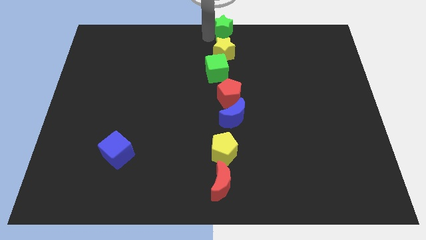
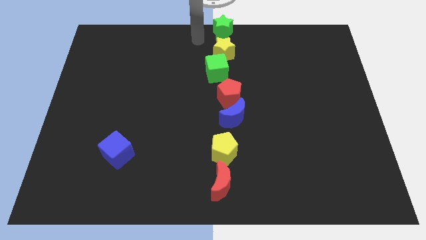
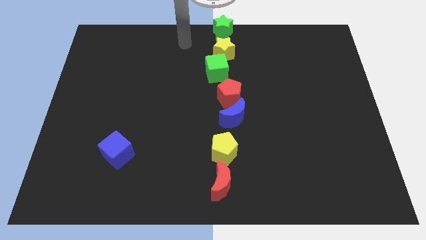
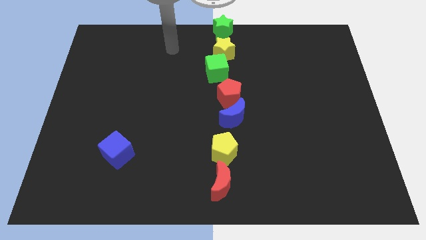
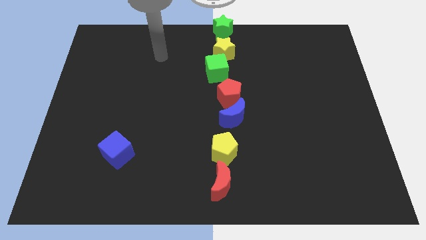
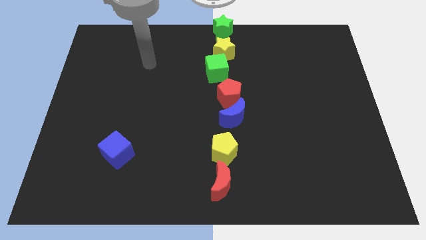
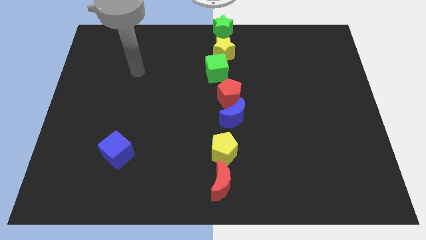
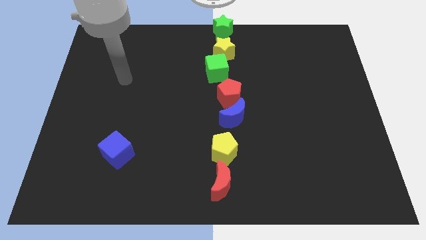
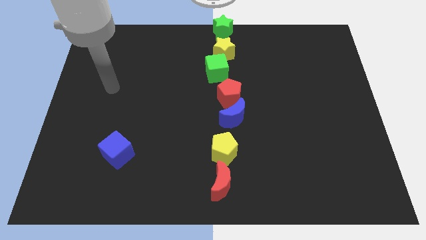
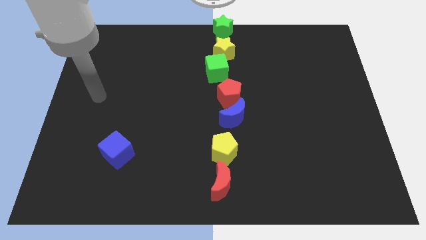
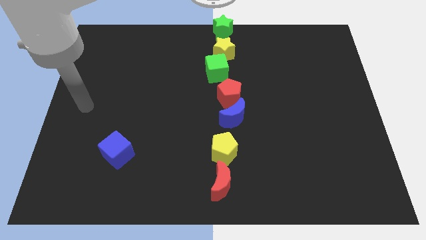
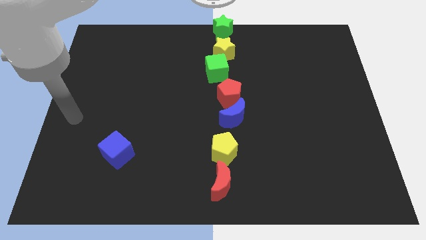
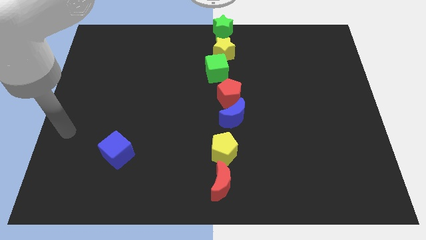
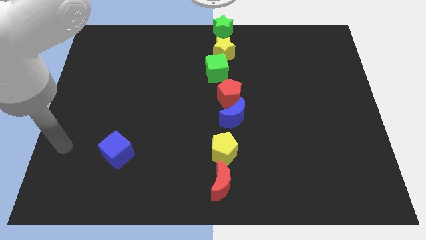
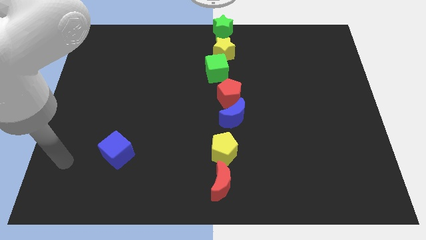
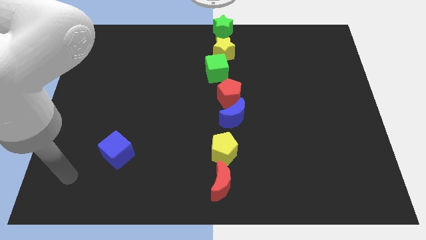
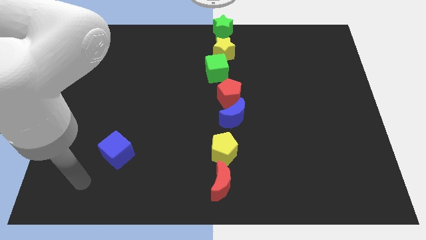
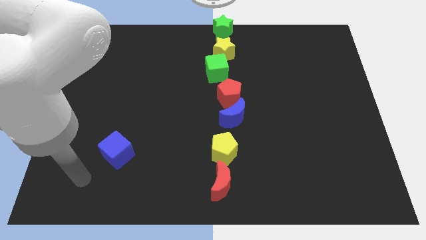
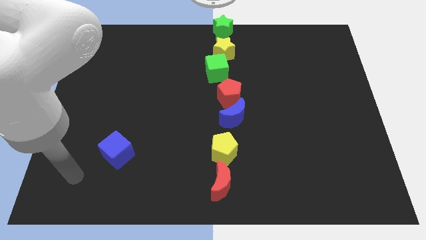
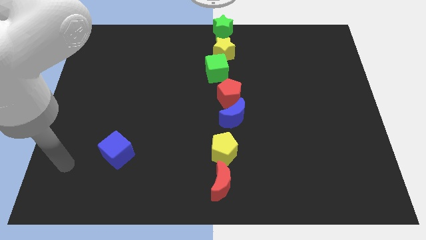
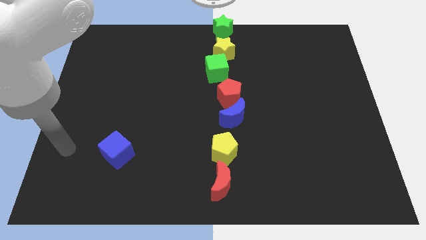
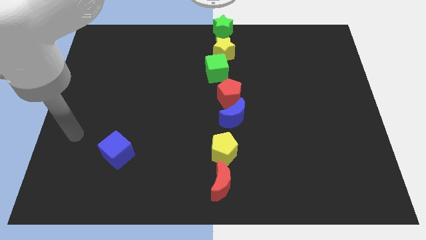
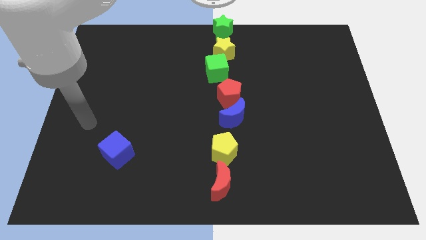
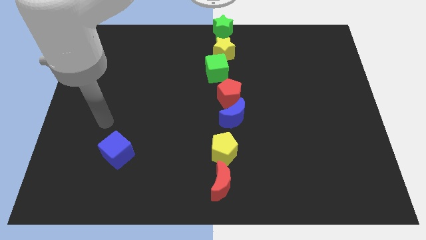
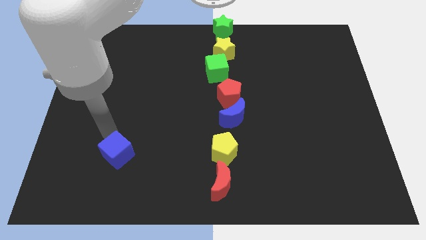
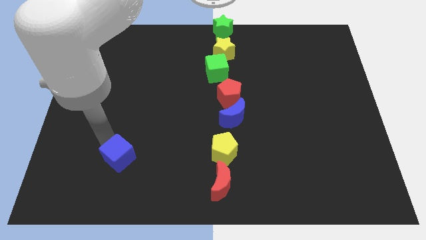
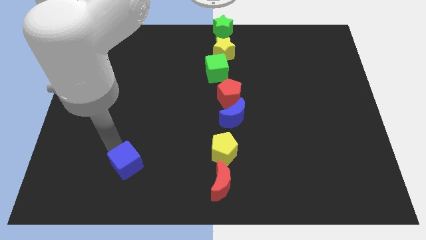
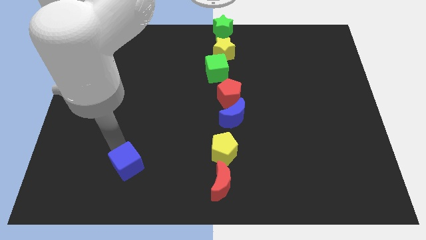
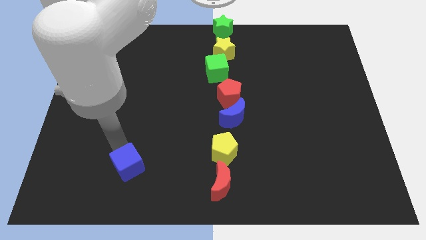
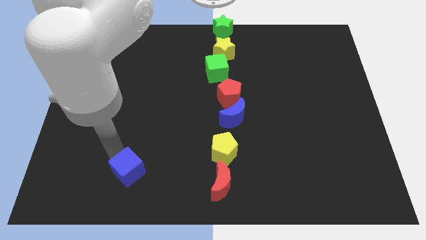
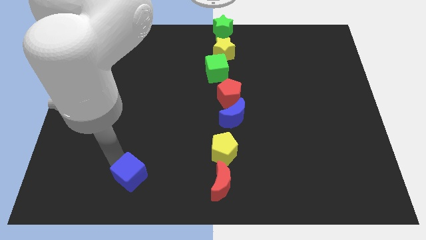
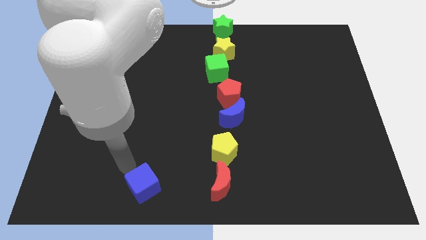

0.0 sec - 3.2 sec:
place blue cube parallel to red moon

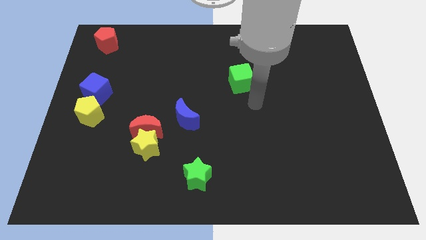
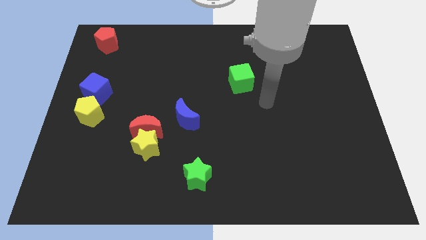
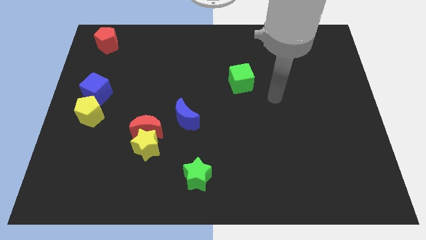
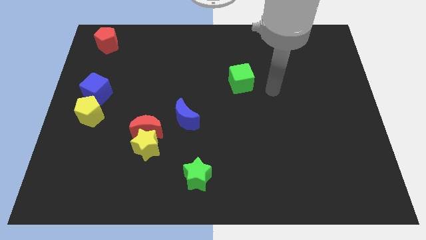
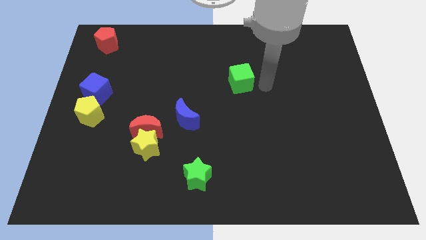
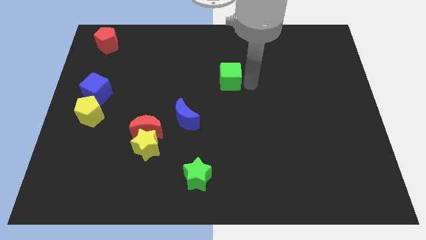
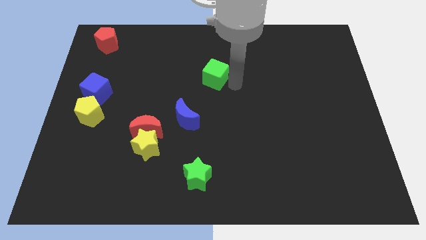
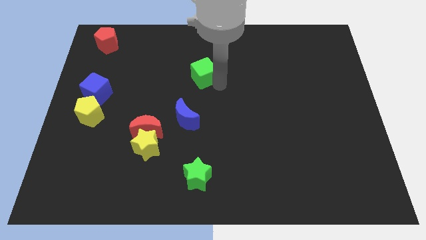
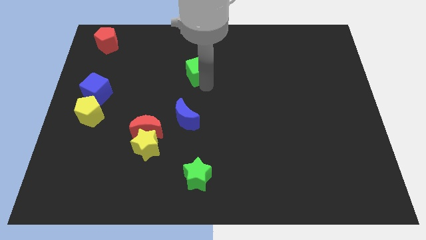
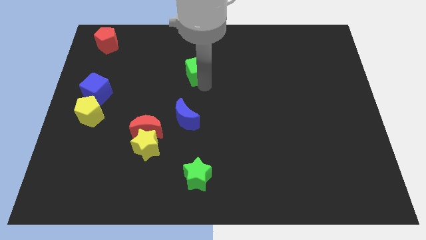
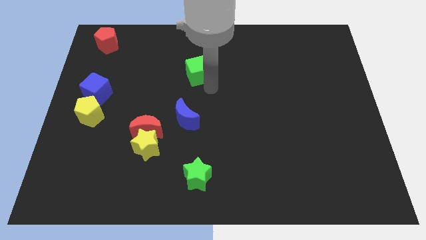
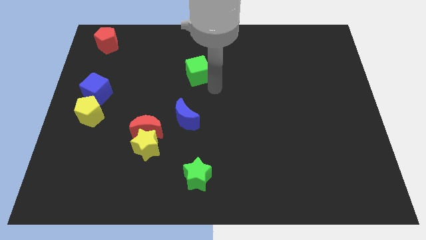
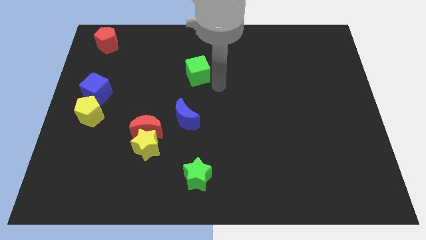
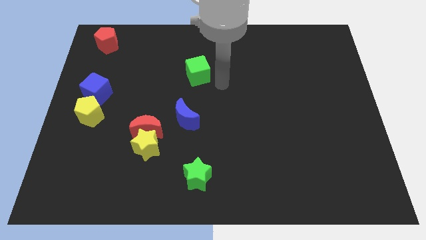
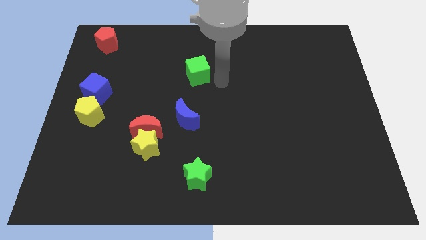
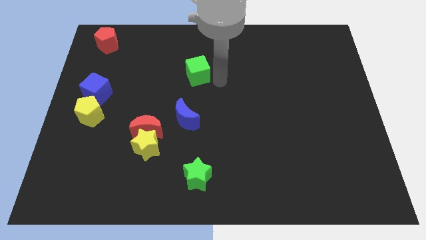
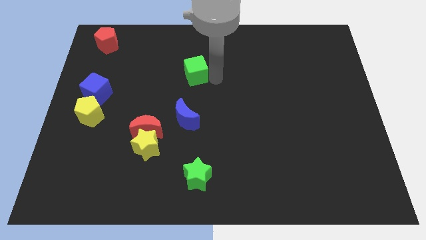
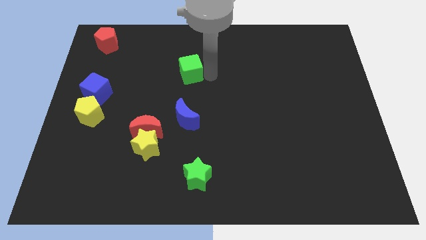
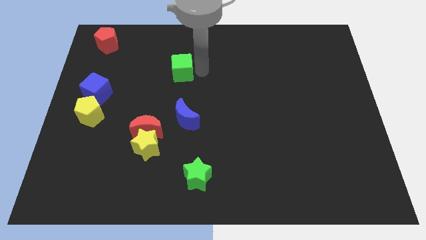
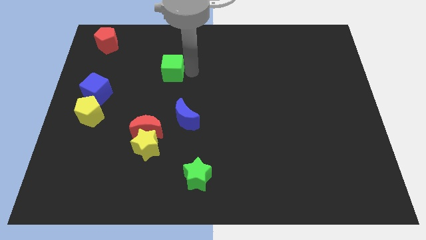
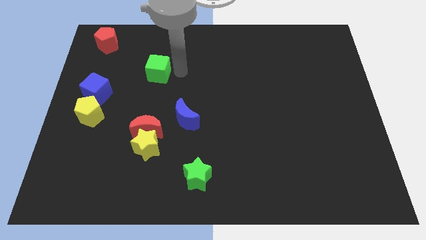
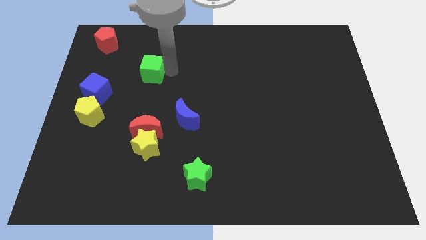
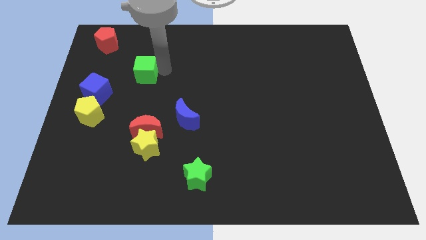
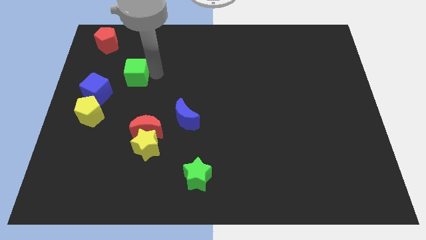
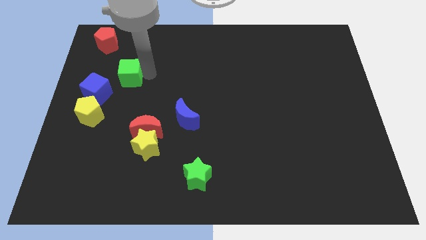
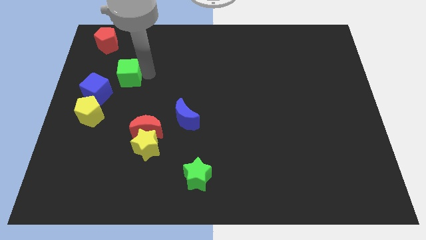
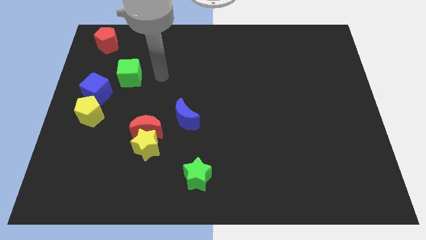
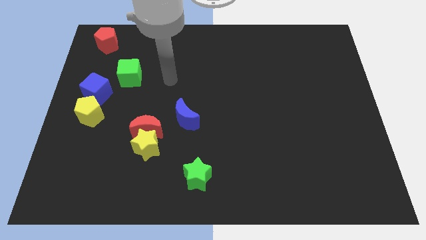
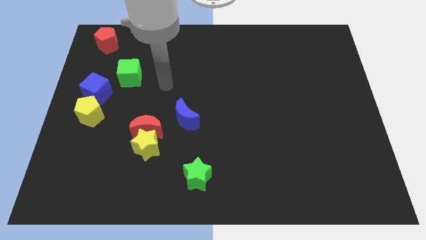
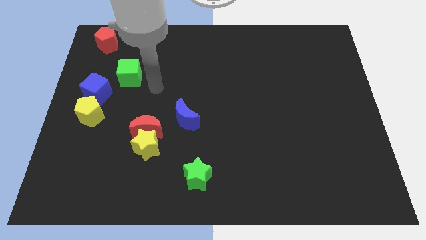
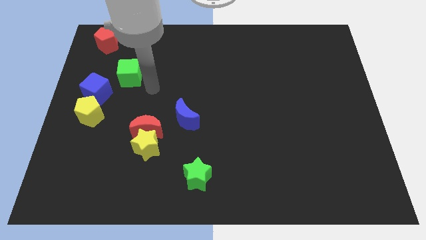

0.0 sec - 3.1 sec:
take the green cube near to the top right of the blue cube

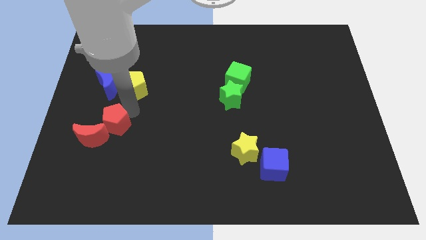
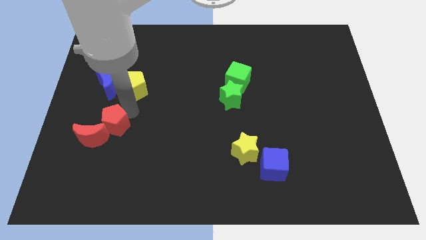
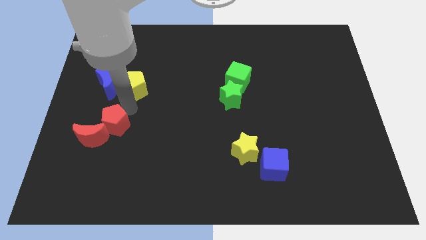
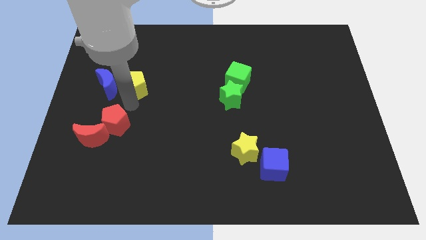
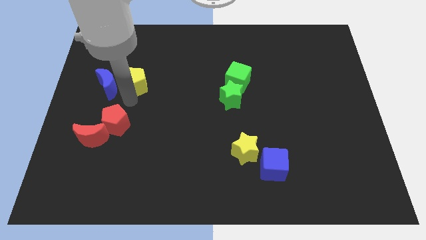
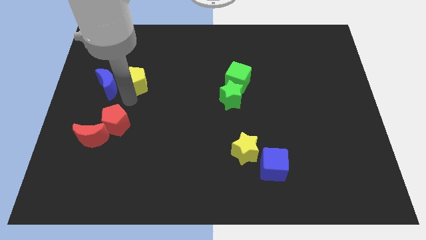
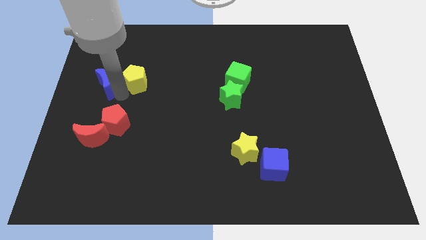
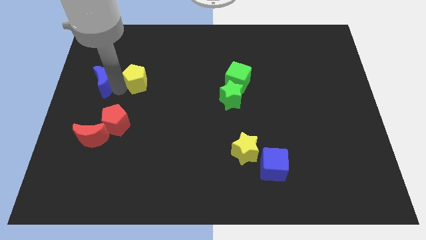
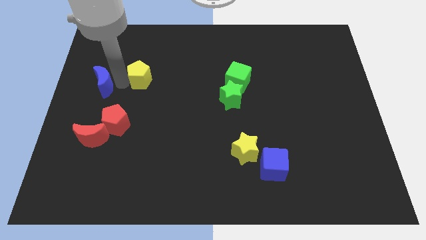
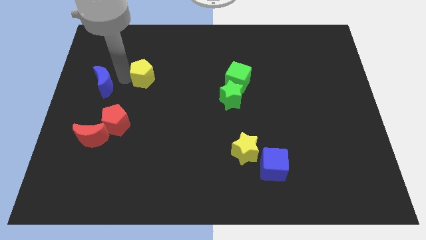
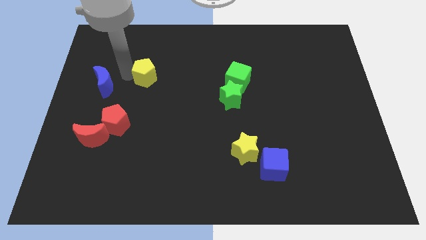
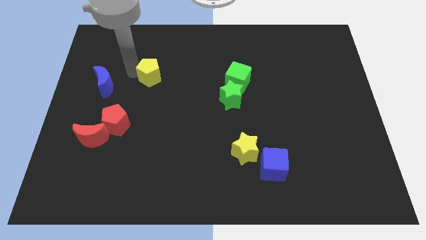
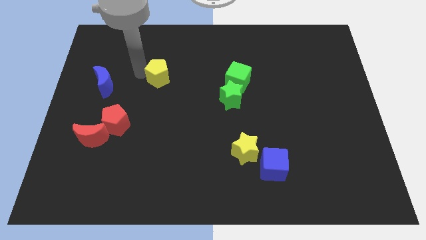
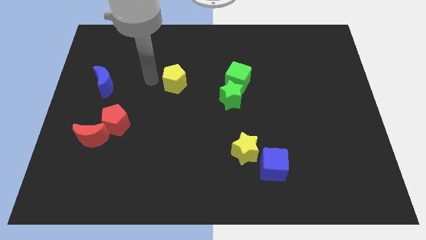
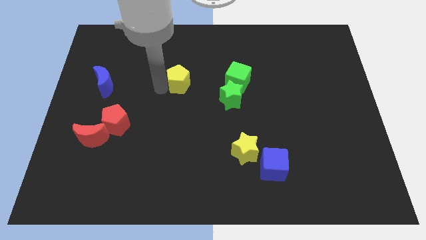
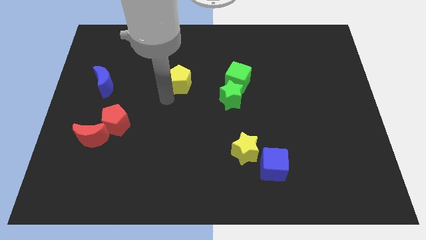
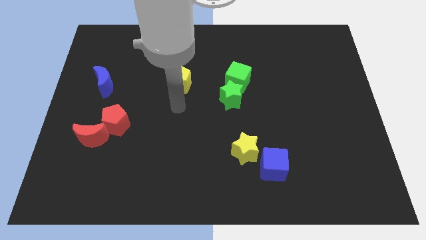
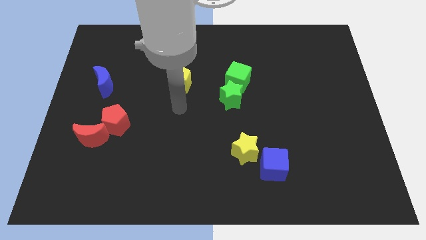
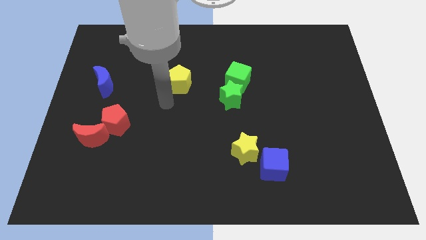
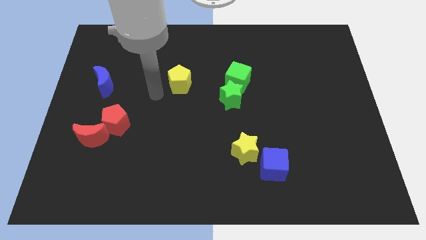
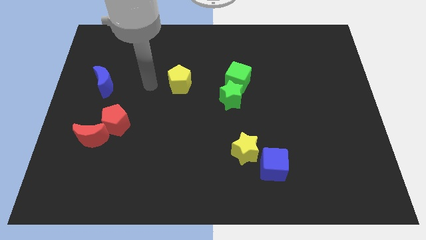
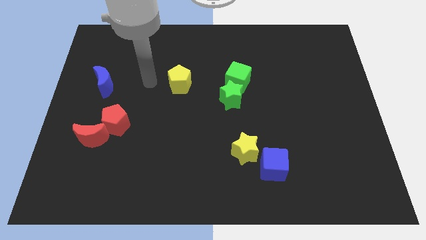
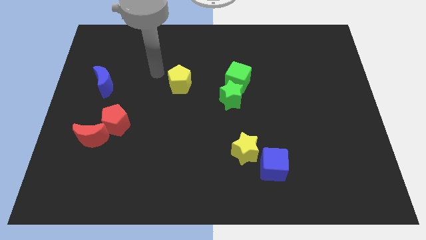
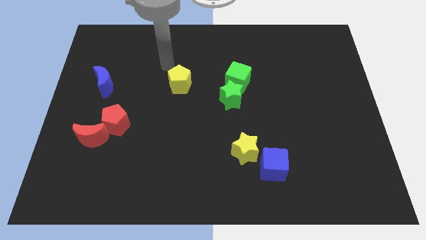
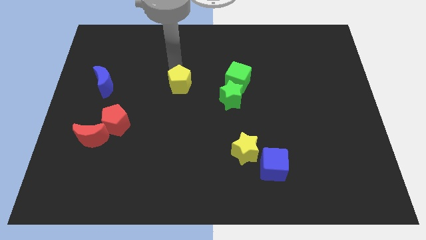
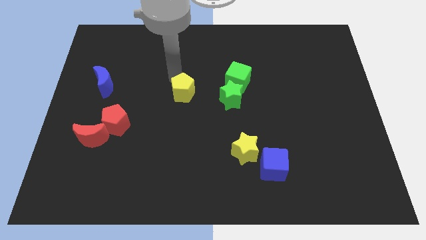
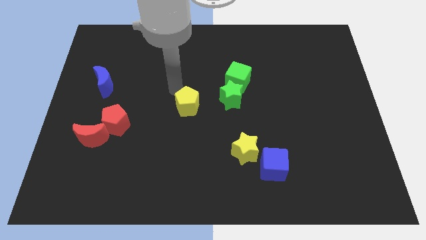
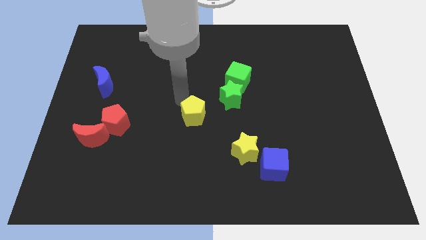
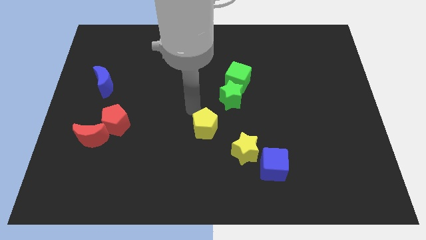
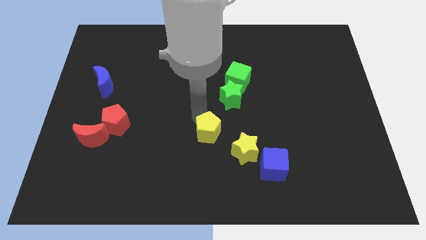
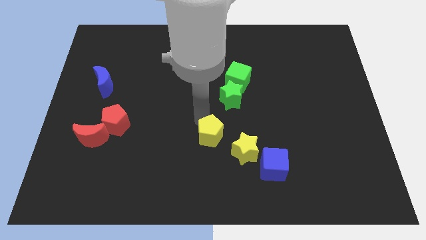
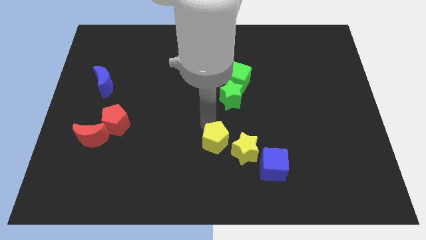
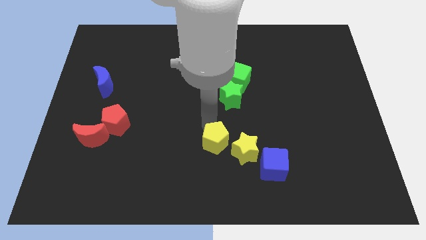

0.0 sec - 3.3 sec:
drag the yellow pentagon diagonally bottom left to the green star
